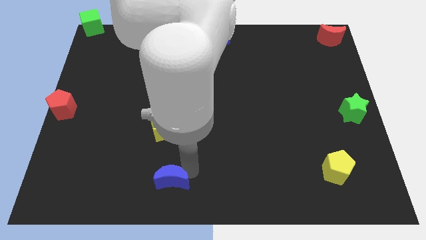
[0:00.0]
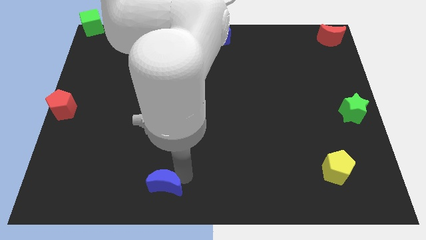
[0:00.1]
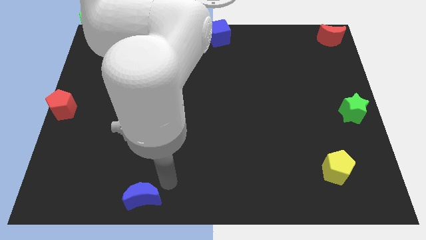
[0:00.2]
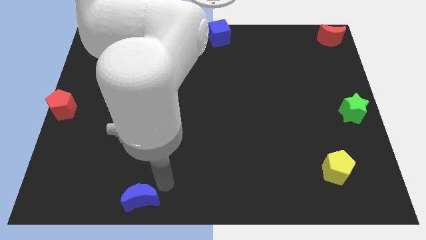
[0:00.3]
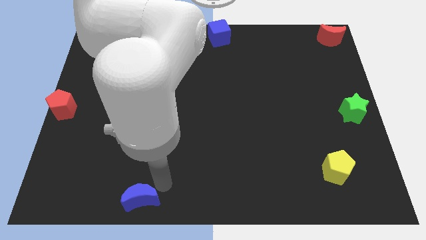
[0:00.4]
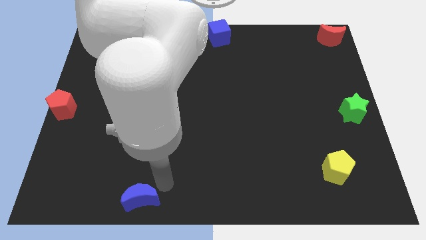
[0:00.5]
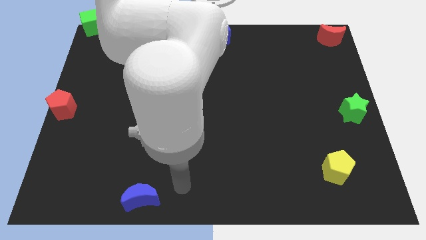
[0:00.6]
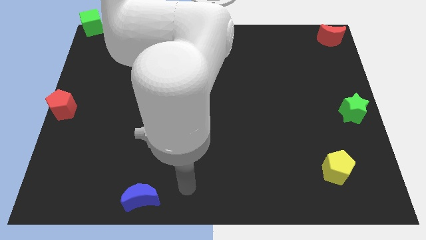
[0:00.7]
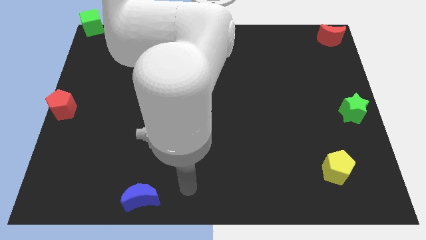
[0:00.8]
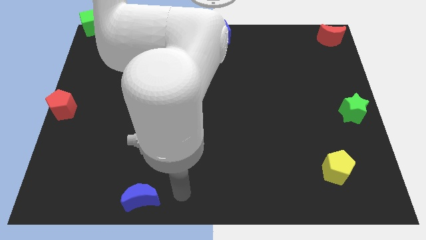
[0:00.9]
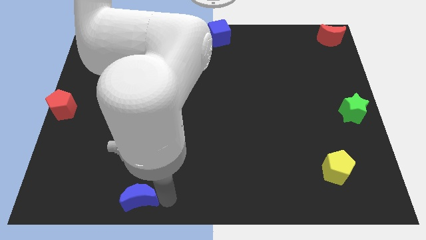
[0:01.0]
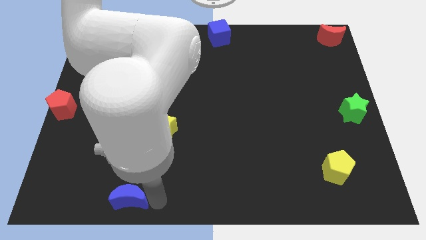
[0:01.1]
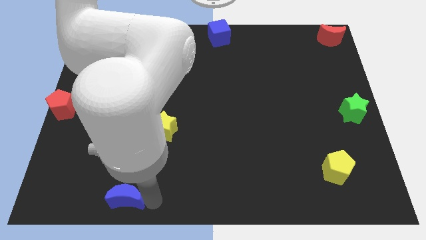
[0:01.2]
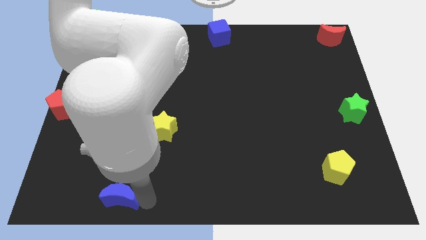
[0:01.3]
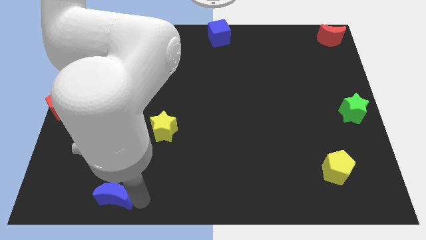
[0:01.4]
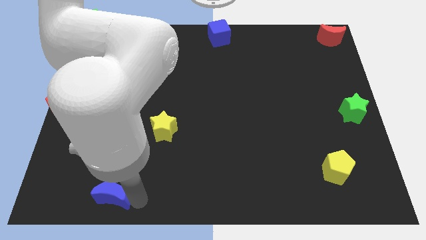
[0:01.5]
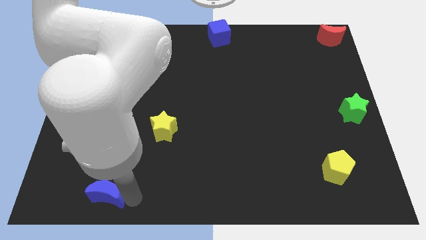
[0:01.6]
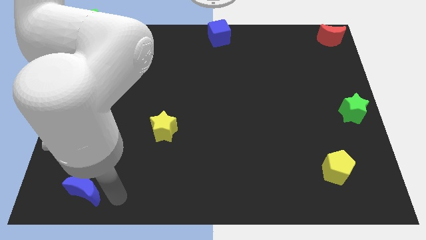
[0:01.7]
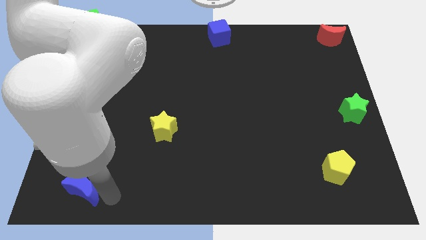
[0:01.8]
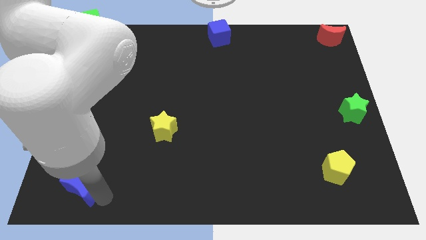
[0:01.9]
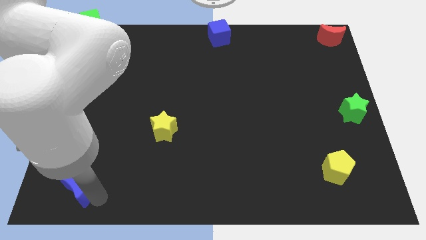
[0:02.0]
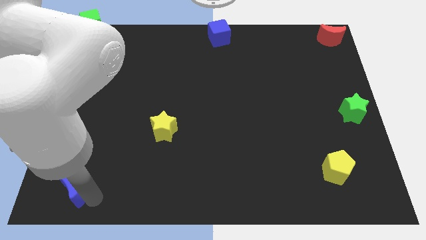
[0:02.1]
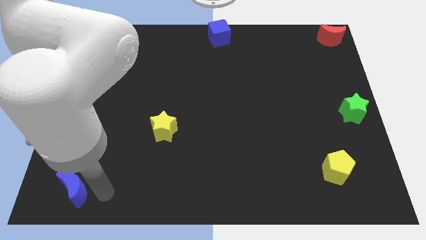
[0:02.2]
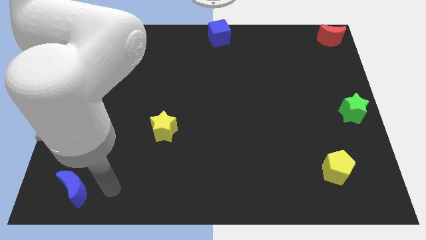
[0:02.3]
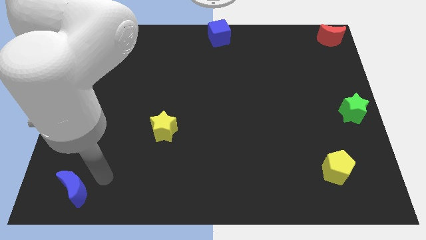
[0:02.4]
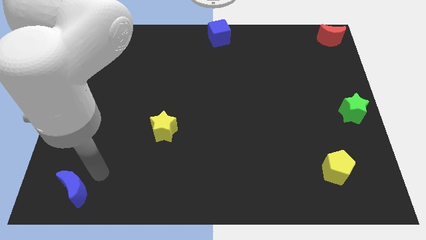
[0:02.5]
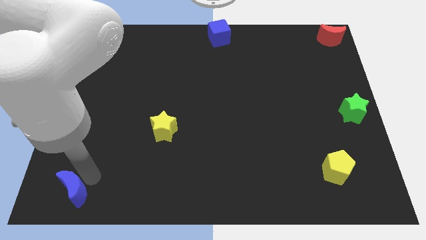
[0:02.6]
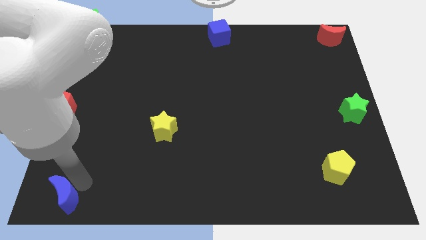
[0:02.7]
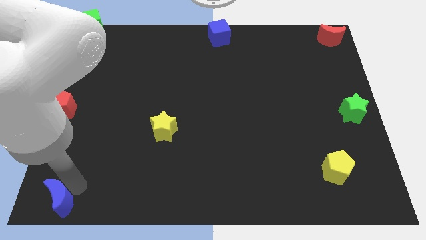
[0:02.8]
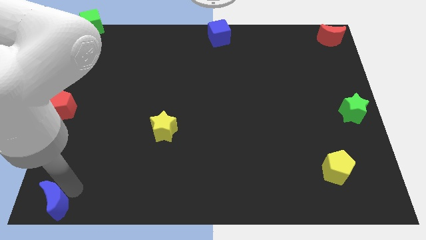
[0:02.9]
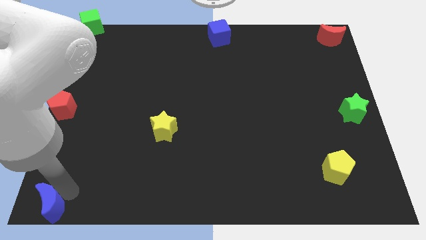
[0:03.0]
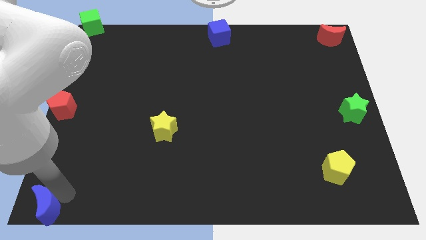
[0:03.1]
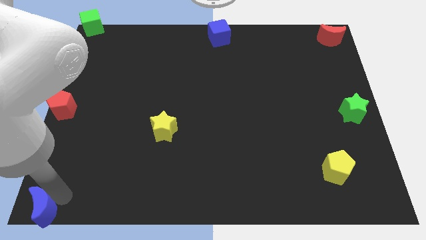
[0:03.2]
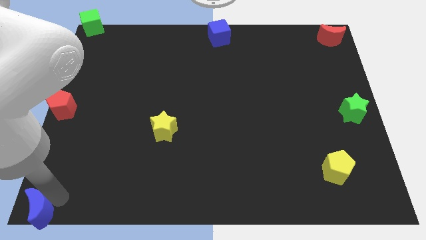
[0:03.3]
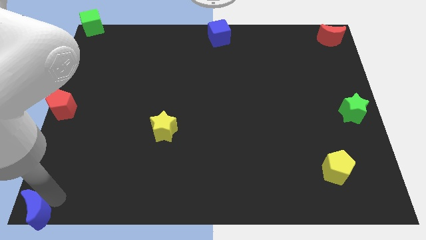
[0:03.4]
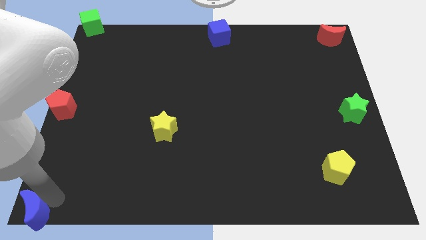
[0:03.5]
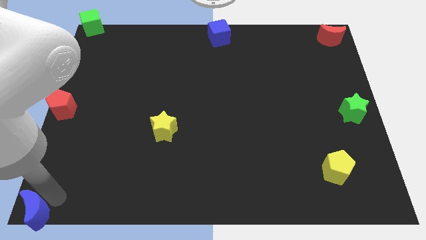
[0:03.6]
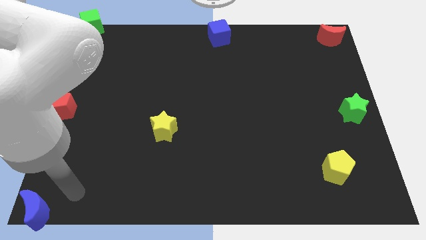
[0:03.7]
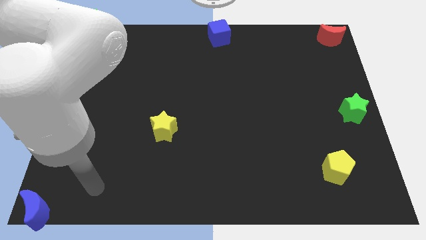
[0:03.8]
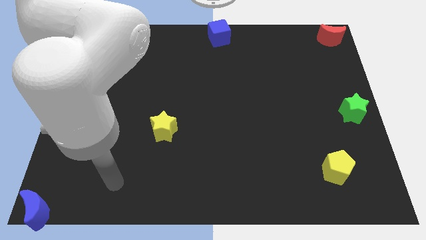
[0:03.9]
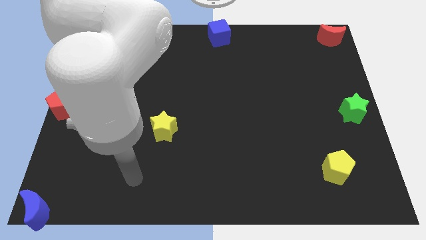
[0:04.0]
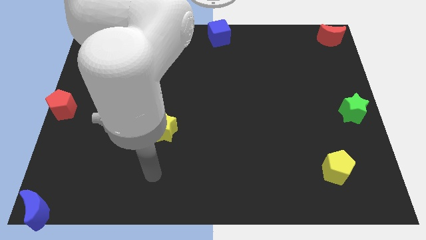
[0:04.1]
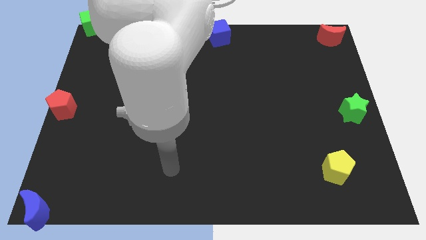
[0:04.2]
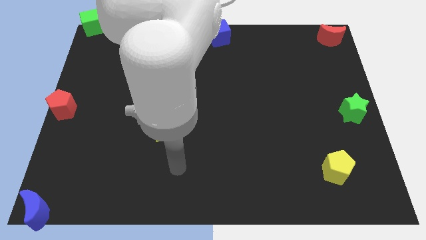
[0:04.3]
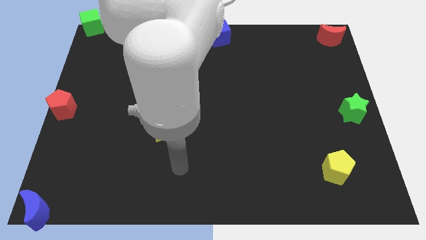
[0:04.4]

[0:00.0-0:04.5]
push blue moon to the left bottom of the board

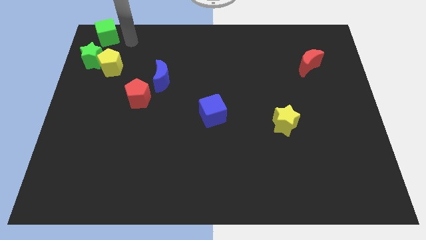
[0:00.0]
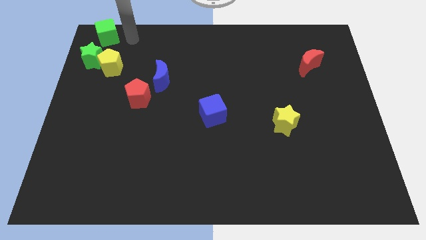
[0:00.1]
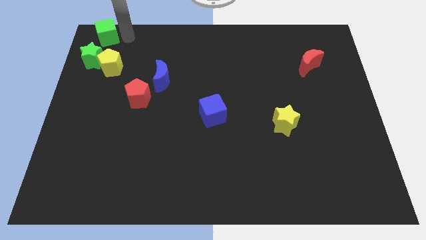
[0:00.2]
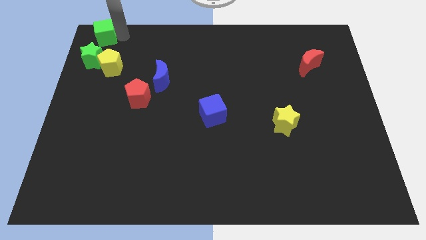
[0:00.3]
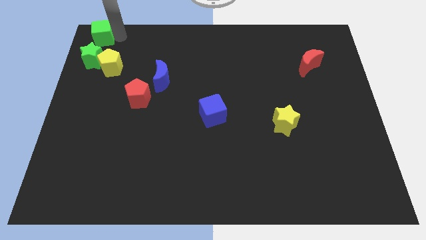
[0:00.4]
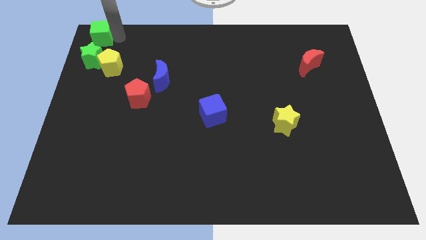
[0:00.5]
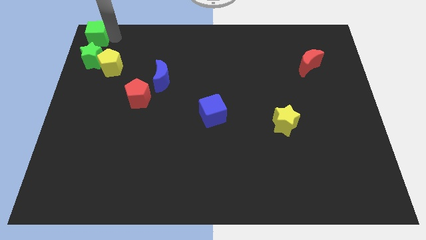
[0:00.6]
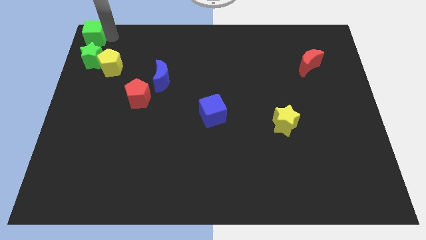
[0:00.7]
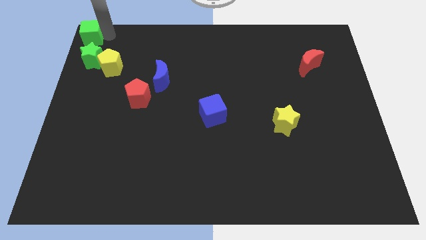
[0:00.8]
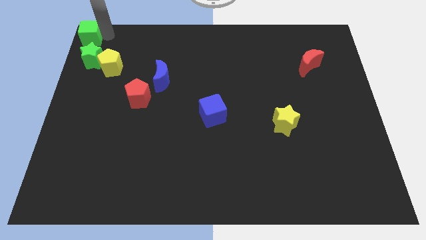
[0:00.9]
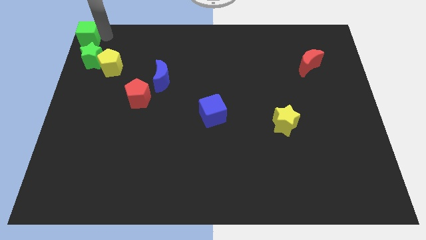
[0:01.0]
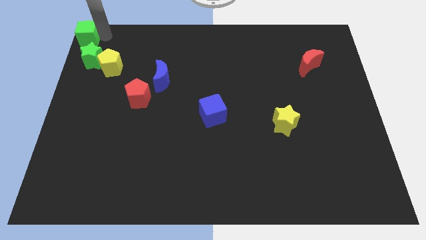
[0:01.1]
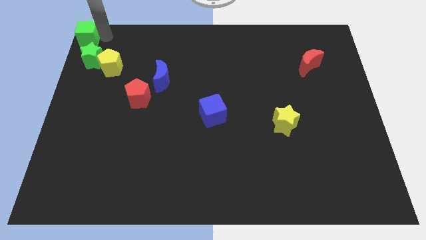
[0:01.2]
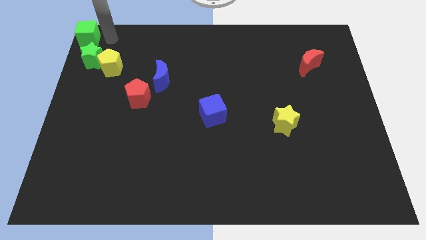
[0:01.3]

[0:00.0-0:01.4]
move the green cube to the top left corner of the board

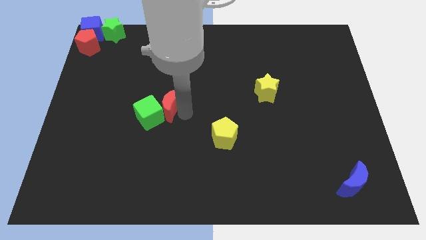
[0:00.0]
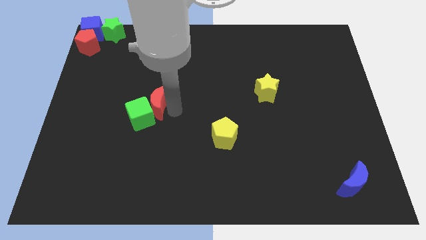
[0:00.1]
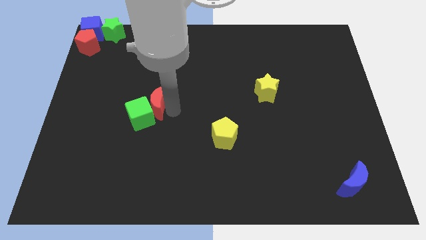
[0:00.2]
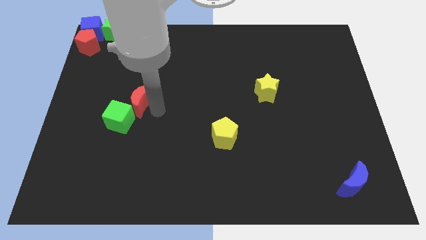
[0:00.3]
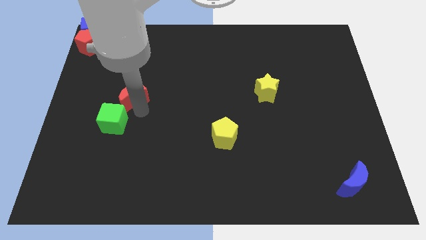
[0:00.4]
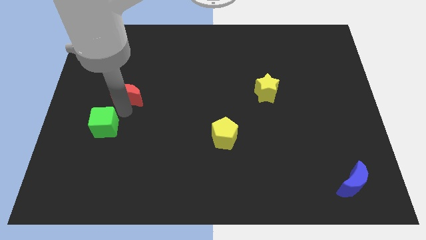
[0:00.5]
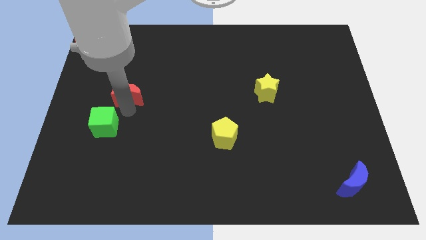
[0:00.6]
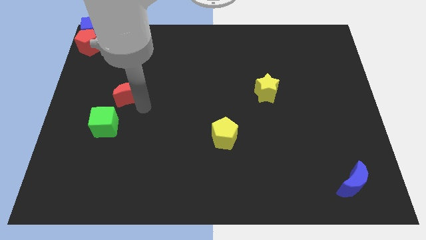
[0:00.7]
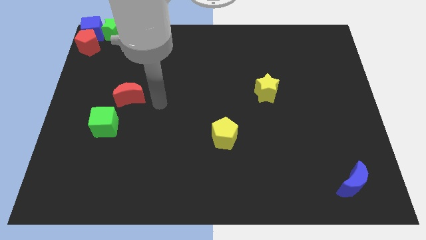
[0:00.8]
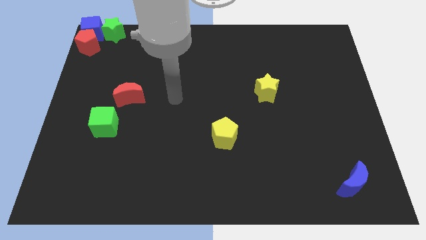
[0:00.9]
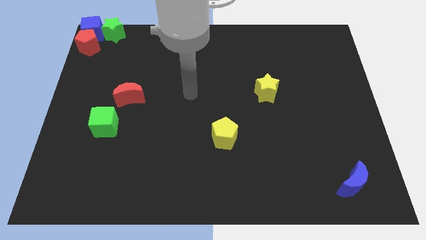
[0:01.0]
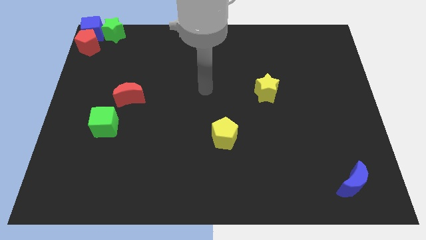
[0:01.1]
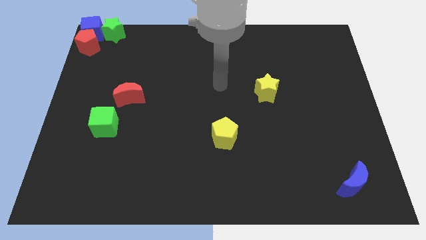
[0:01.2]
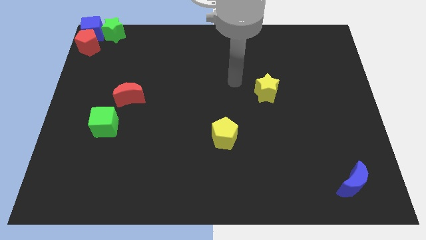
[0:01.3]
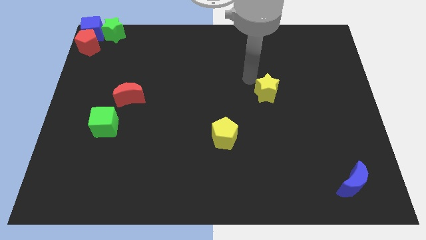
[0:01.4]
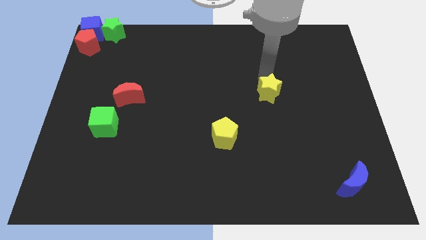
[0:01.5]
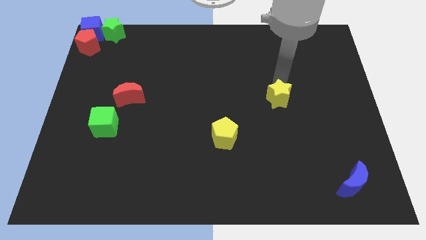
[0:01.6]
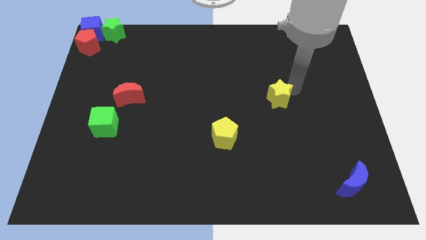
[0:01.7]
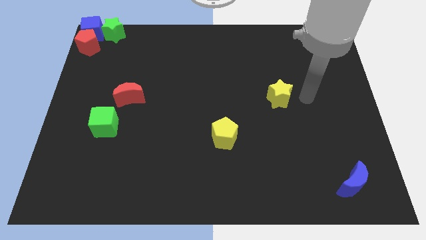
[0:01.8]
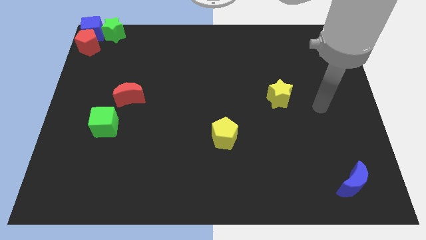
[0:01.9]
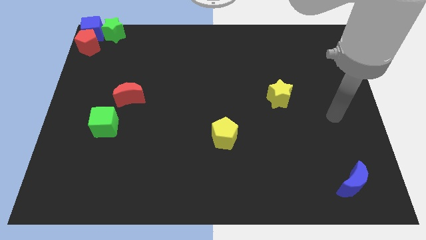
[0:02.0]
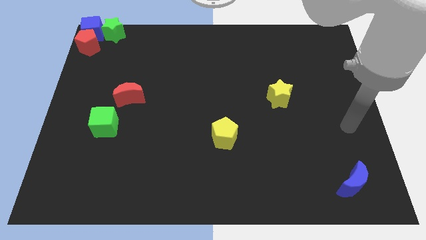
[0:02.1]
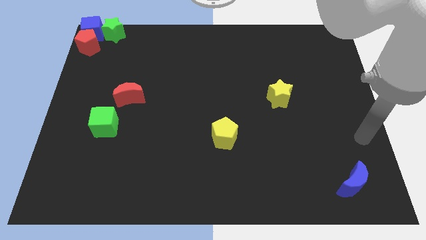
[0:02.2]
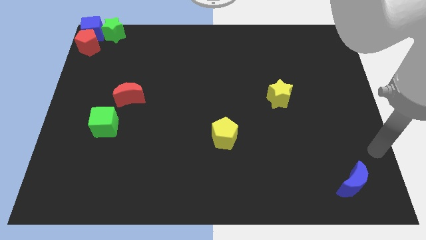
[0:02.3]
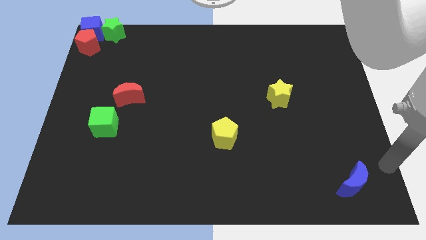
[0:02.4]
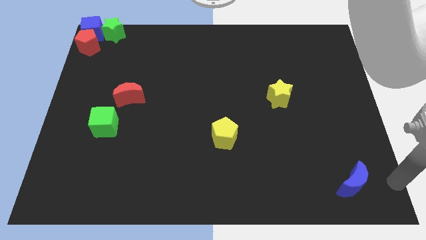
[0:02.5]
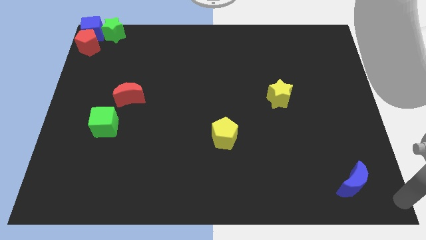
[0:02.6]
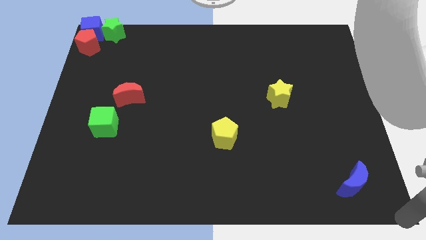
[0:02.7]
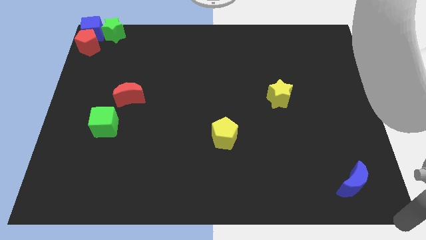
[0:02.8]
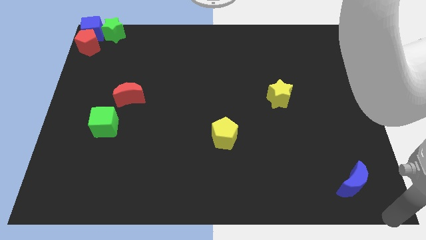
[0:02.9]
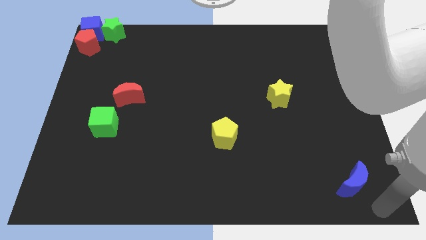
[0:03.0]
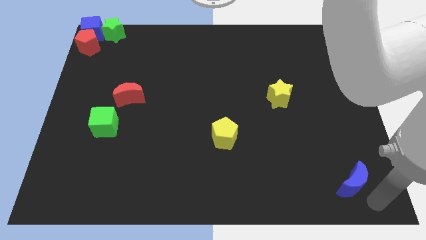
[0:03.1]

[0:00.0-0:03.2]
push the red crescent towards the left side of the board
